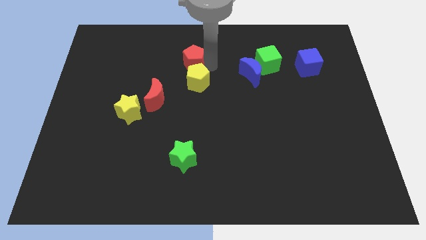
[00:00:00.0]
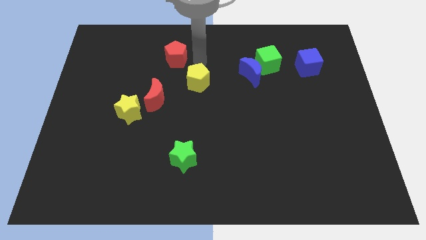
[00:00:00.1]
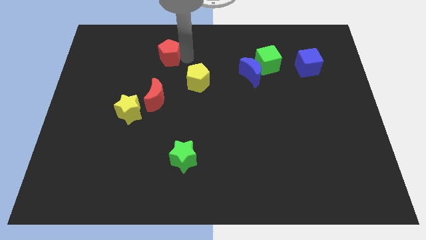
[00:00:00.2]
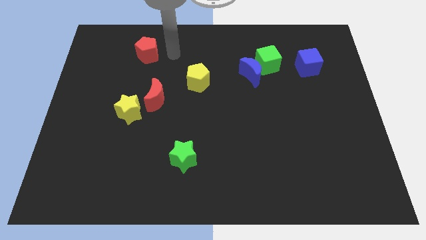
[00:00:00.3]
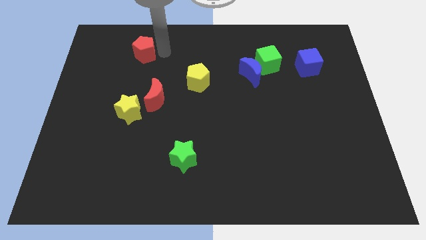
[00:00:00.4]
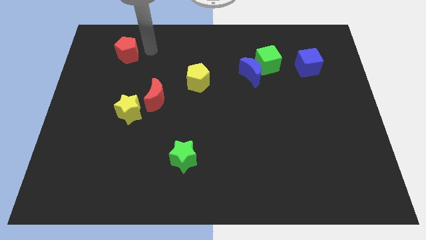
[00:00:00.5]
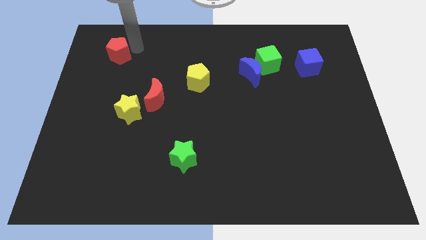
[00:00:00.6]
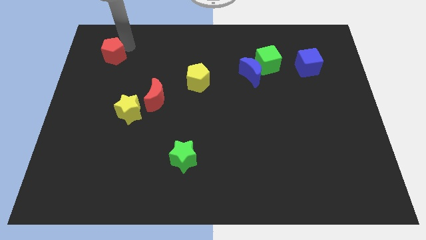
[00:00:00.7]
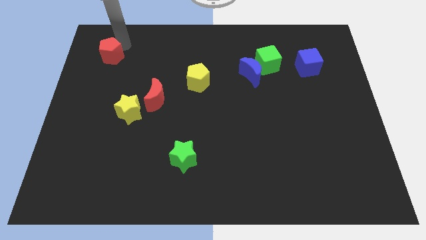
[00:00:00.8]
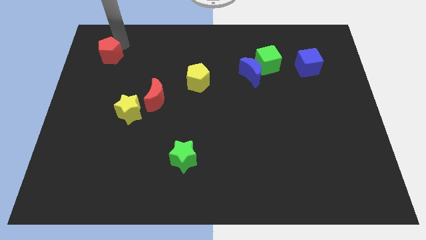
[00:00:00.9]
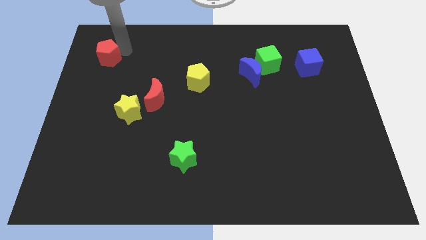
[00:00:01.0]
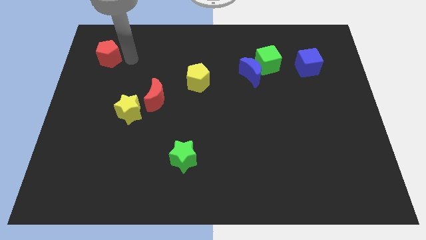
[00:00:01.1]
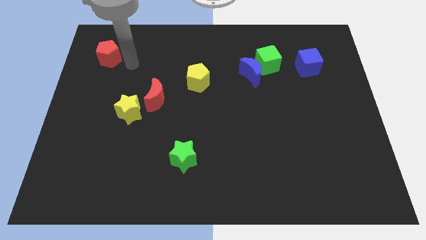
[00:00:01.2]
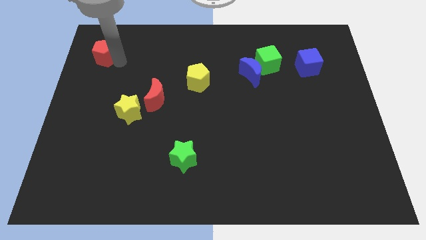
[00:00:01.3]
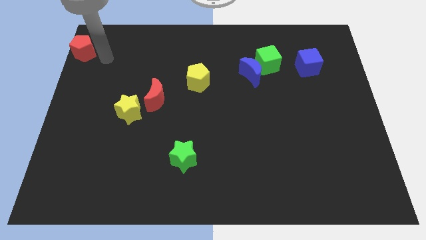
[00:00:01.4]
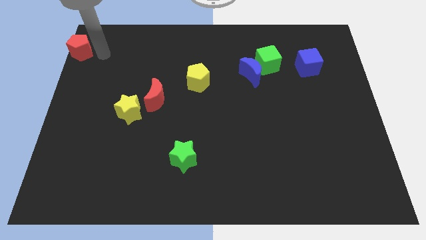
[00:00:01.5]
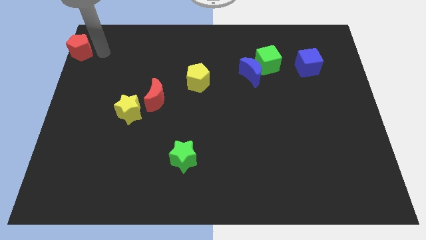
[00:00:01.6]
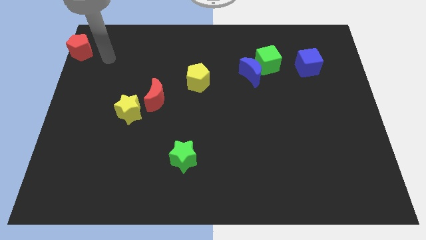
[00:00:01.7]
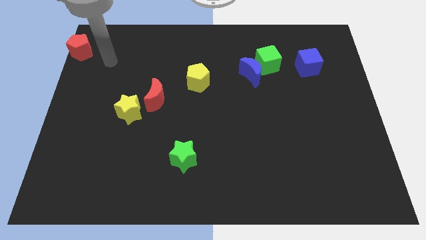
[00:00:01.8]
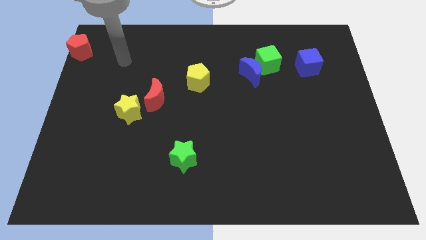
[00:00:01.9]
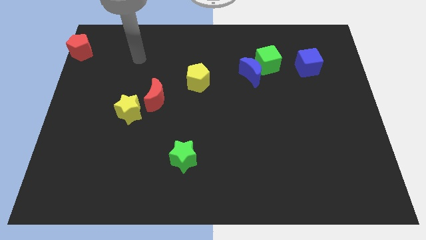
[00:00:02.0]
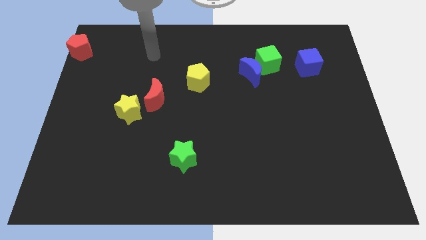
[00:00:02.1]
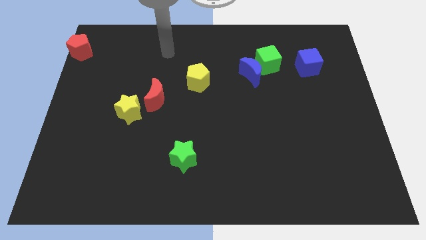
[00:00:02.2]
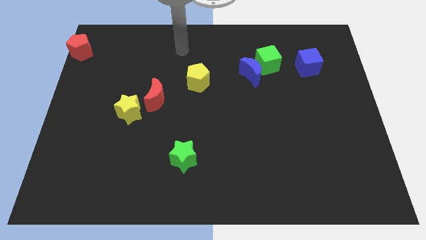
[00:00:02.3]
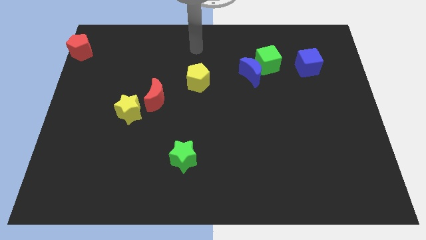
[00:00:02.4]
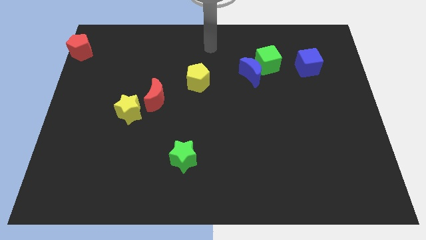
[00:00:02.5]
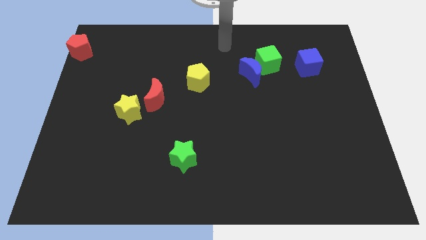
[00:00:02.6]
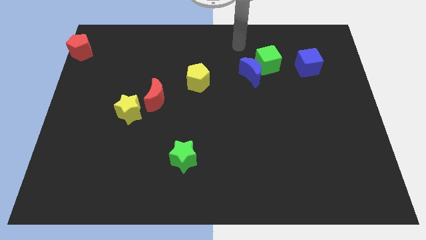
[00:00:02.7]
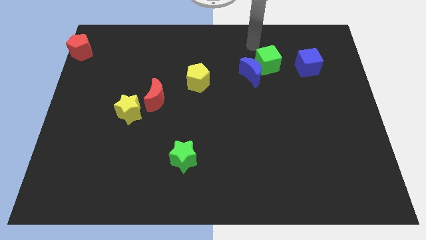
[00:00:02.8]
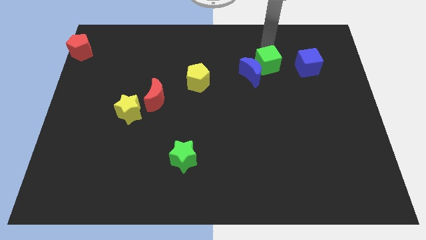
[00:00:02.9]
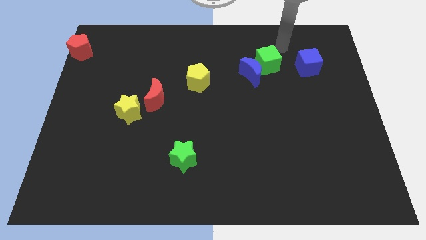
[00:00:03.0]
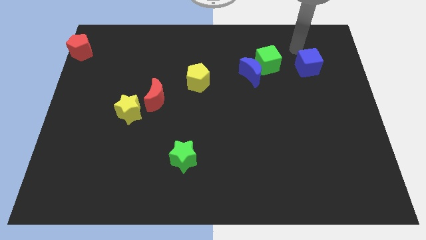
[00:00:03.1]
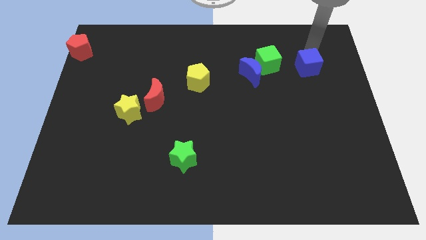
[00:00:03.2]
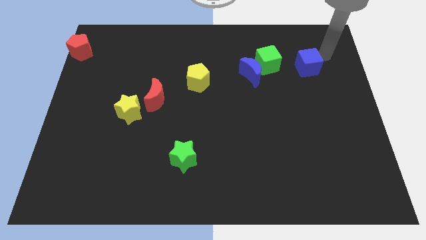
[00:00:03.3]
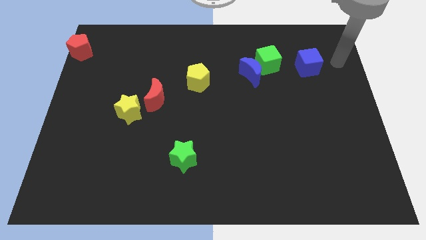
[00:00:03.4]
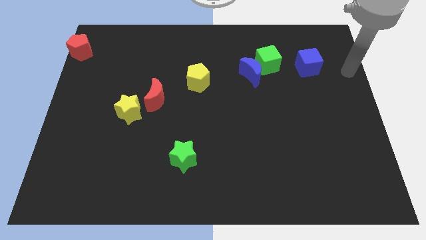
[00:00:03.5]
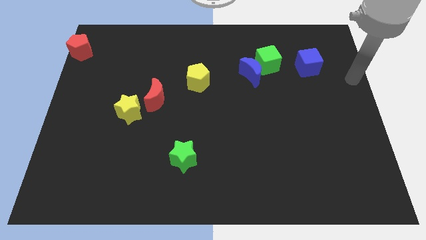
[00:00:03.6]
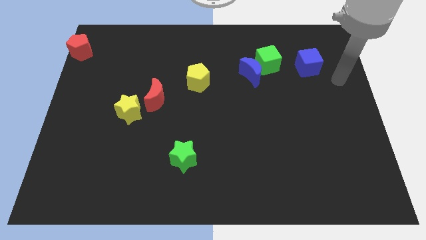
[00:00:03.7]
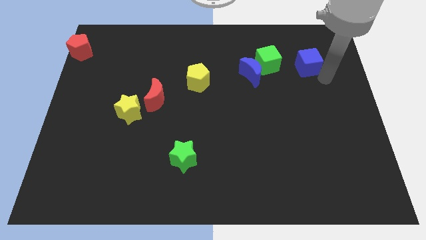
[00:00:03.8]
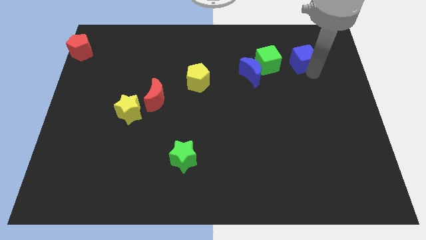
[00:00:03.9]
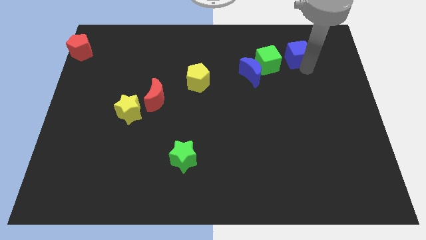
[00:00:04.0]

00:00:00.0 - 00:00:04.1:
slide the red pentagon to the top left of the board

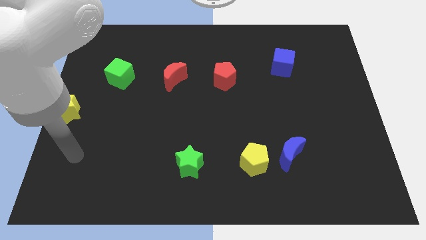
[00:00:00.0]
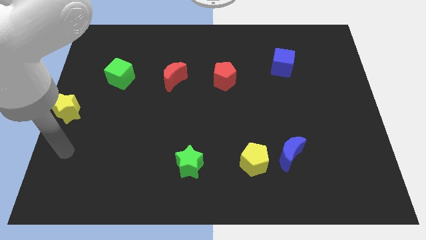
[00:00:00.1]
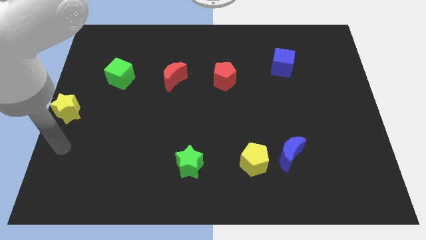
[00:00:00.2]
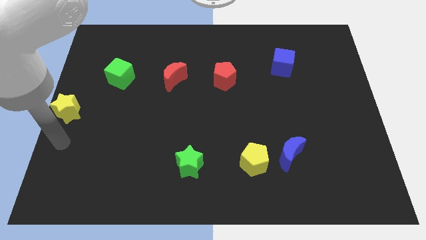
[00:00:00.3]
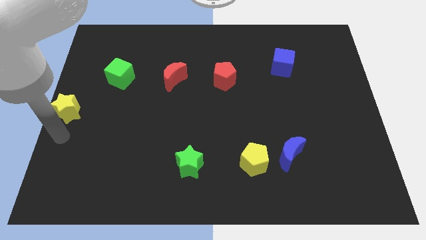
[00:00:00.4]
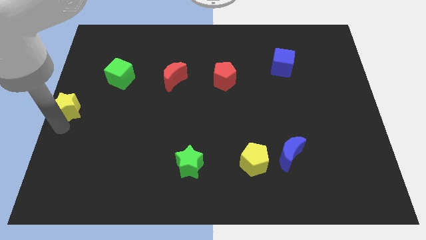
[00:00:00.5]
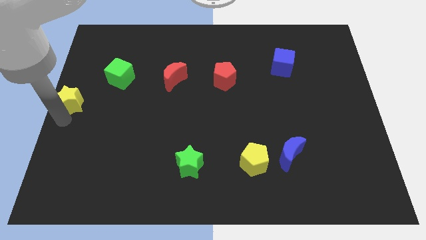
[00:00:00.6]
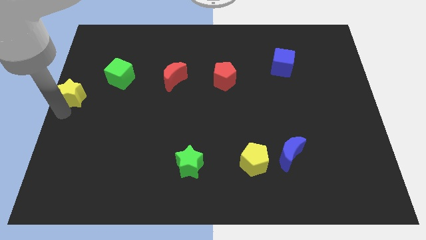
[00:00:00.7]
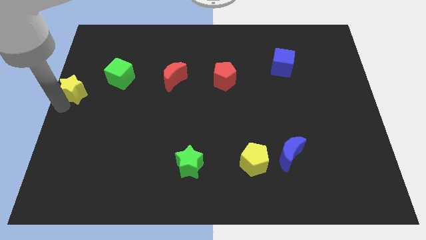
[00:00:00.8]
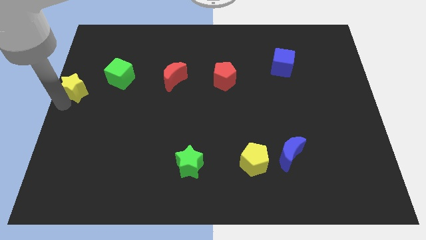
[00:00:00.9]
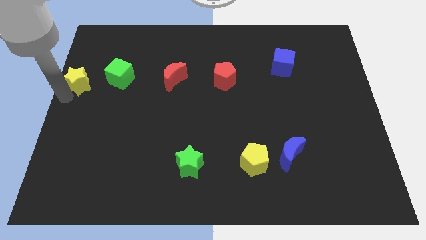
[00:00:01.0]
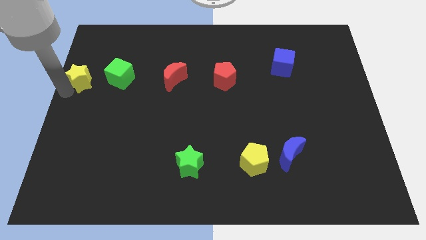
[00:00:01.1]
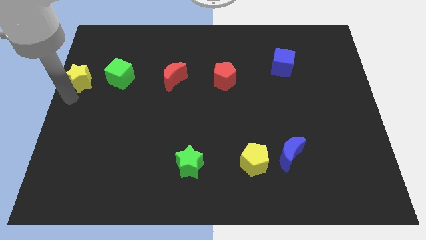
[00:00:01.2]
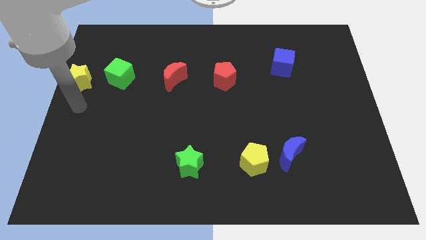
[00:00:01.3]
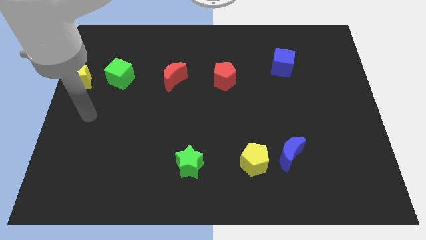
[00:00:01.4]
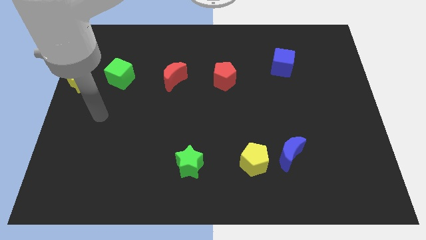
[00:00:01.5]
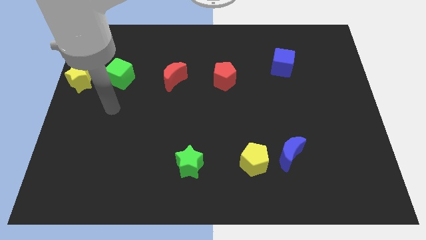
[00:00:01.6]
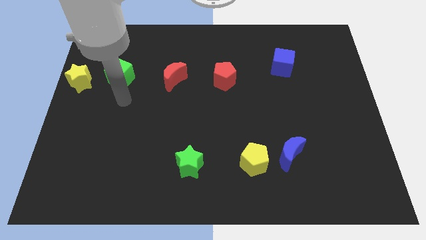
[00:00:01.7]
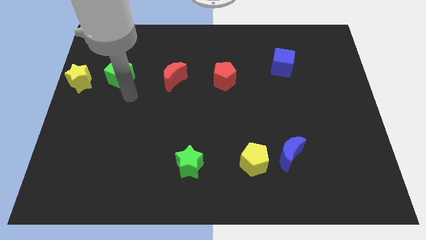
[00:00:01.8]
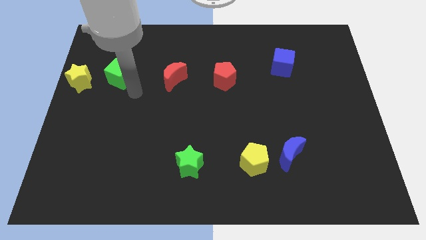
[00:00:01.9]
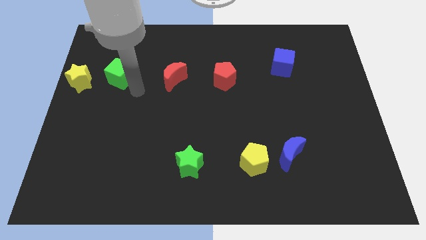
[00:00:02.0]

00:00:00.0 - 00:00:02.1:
push yellow star parallel to green cube

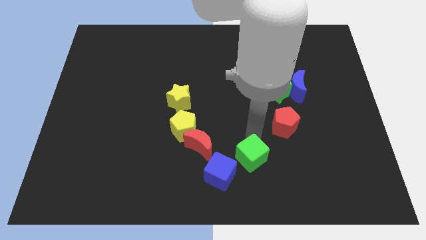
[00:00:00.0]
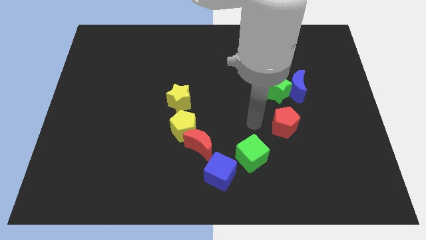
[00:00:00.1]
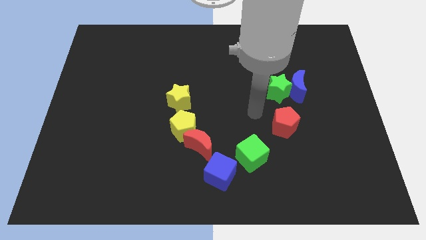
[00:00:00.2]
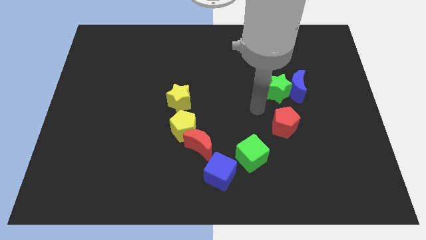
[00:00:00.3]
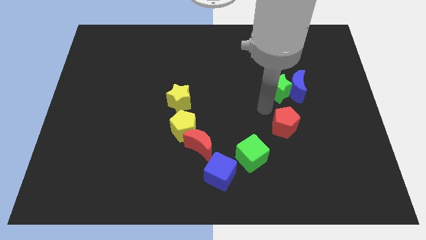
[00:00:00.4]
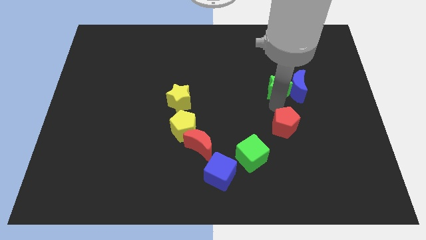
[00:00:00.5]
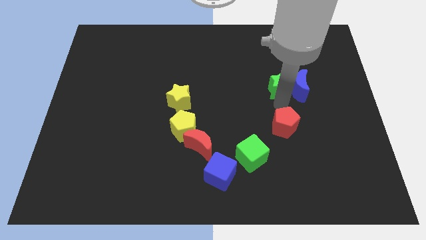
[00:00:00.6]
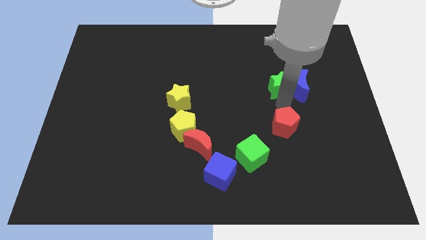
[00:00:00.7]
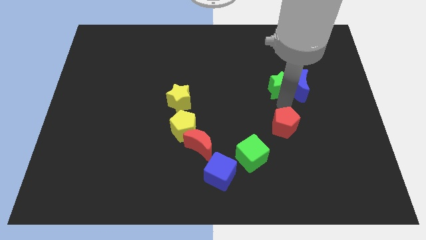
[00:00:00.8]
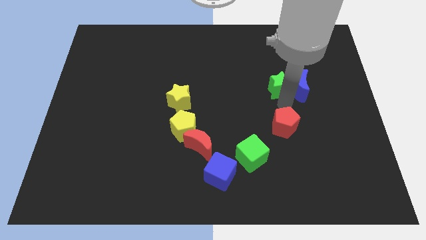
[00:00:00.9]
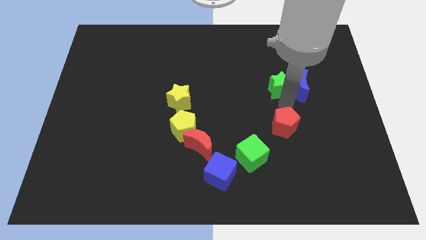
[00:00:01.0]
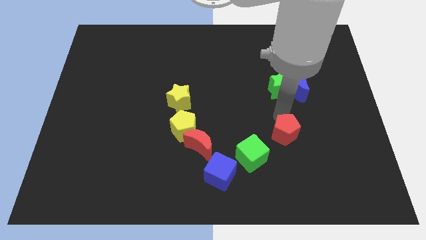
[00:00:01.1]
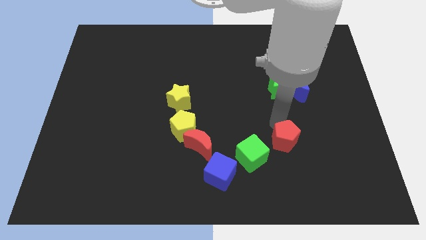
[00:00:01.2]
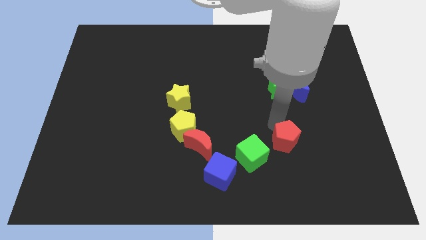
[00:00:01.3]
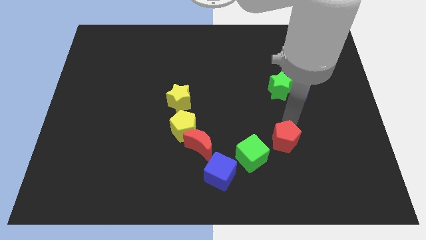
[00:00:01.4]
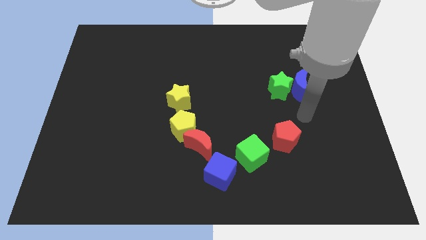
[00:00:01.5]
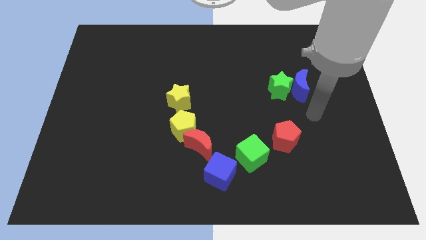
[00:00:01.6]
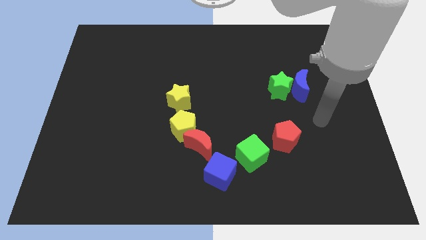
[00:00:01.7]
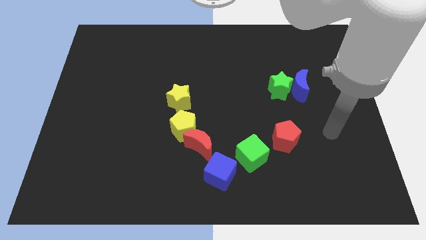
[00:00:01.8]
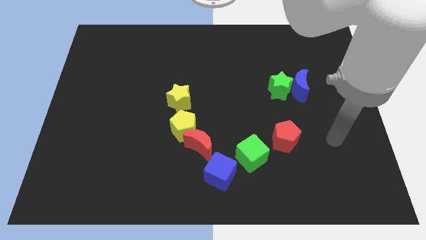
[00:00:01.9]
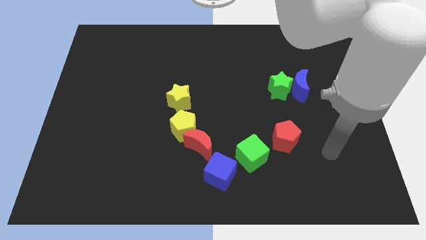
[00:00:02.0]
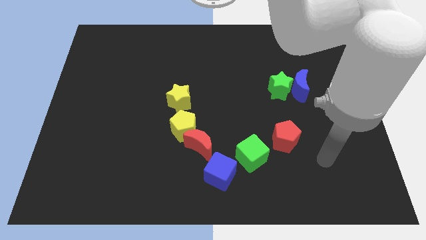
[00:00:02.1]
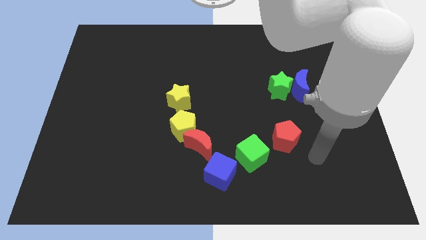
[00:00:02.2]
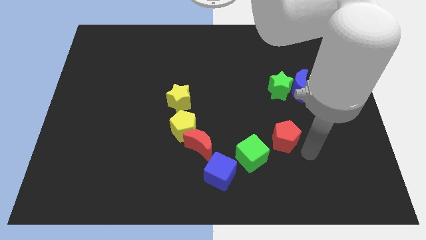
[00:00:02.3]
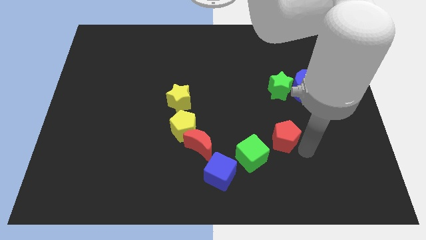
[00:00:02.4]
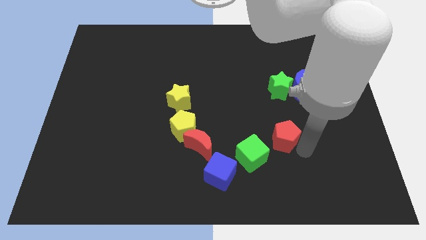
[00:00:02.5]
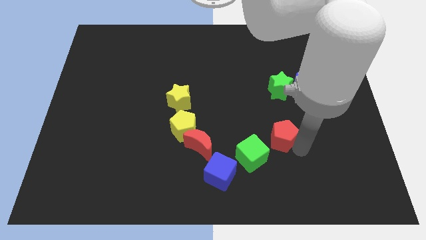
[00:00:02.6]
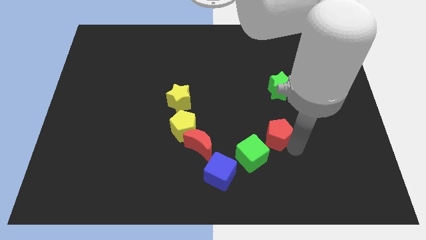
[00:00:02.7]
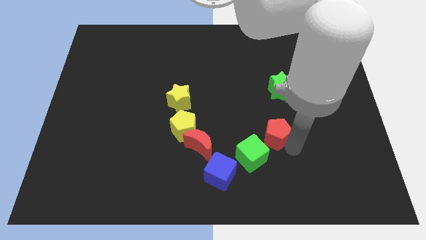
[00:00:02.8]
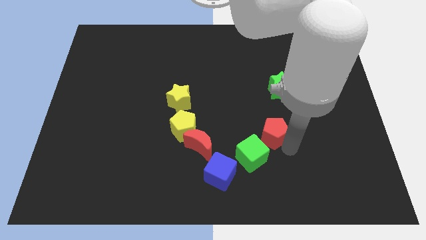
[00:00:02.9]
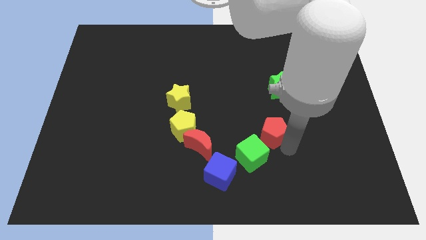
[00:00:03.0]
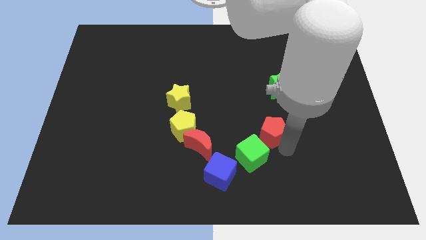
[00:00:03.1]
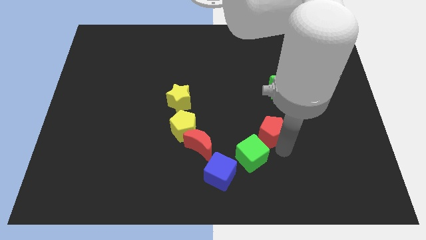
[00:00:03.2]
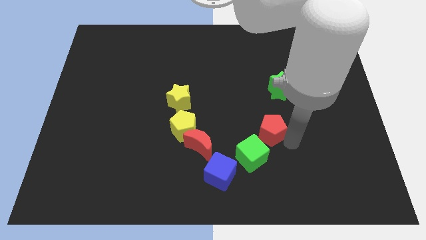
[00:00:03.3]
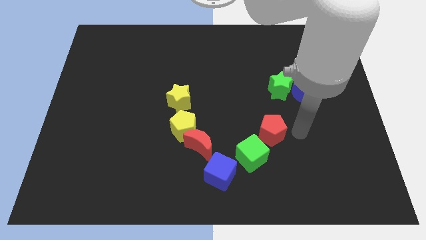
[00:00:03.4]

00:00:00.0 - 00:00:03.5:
put the red pentagon next to the top right side of the green cube
